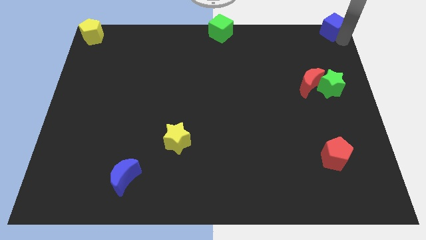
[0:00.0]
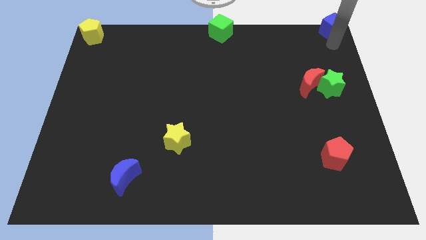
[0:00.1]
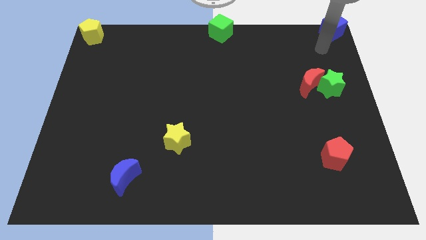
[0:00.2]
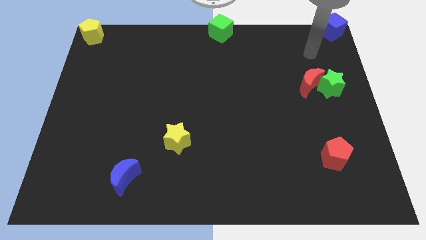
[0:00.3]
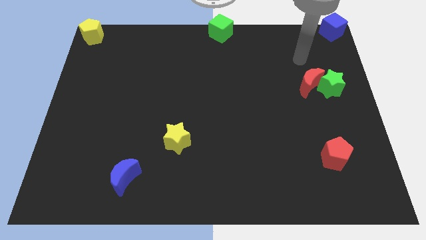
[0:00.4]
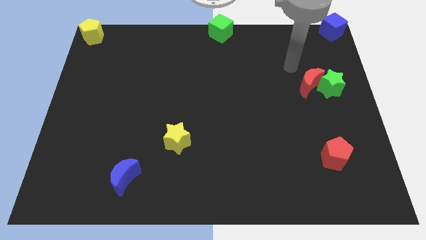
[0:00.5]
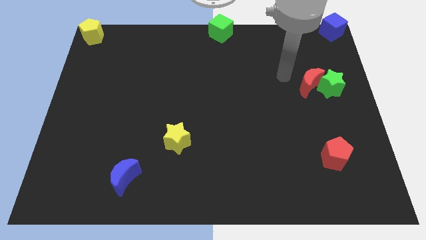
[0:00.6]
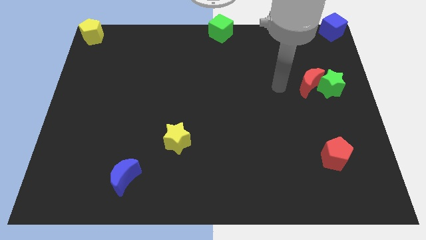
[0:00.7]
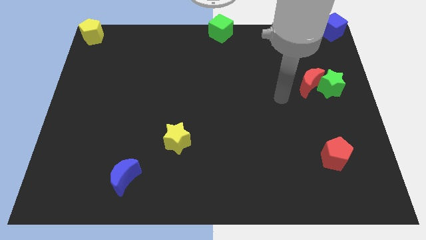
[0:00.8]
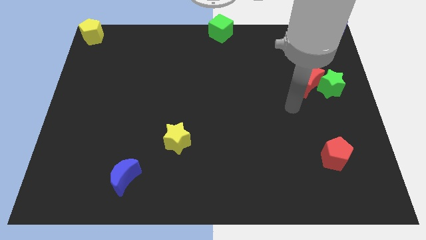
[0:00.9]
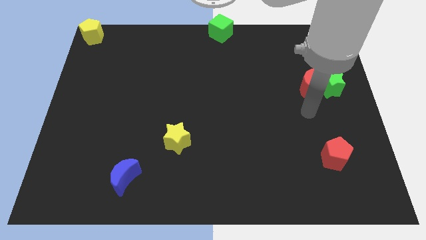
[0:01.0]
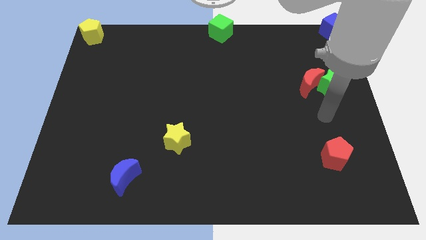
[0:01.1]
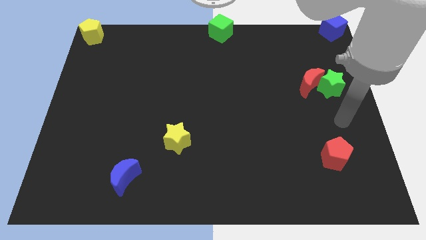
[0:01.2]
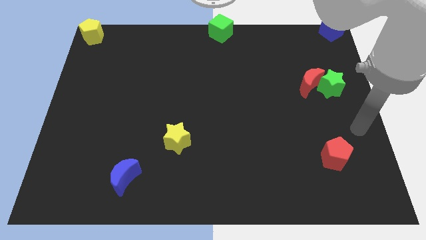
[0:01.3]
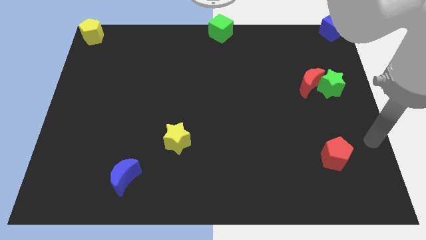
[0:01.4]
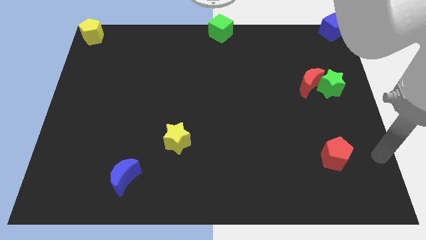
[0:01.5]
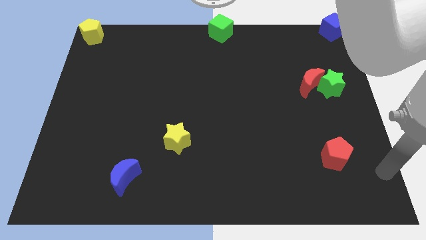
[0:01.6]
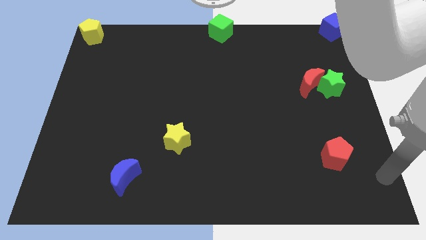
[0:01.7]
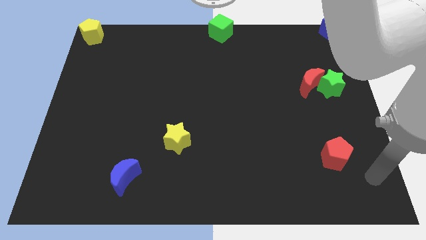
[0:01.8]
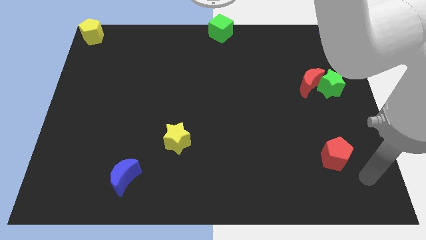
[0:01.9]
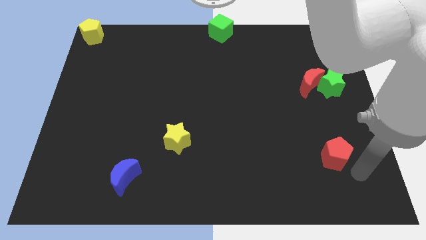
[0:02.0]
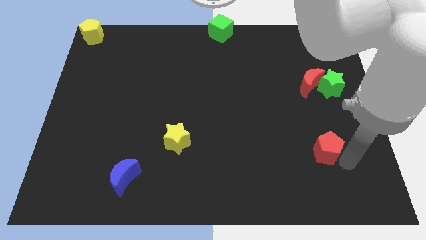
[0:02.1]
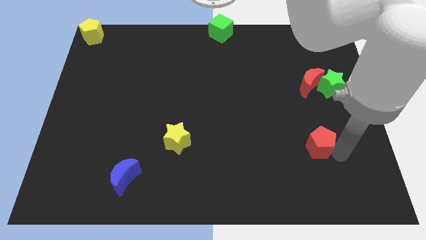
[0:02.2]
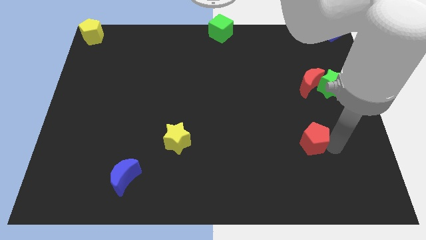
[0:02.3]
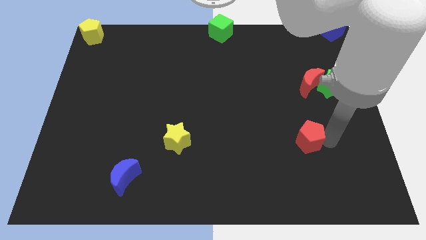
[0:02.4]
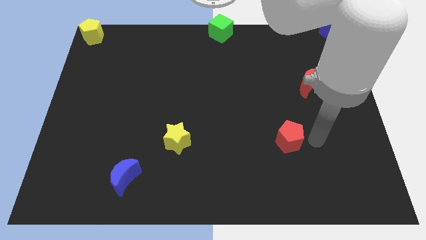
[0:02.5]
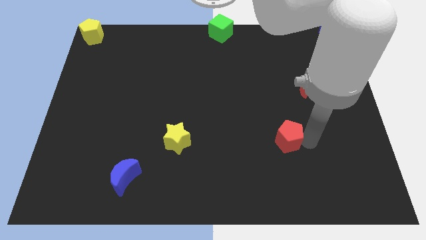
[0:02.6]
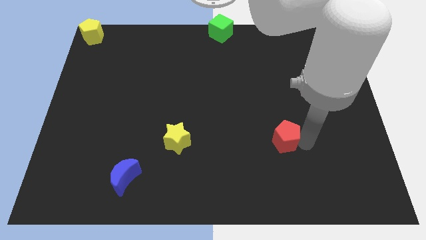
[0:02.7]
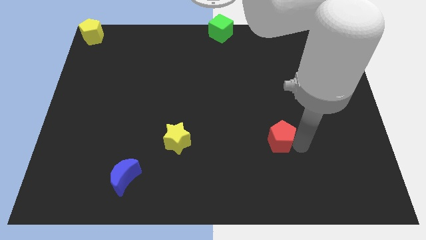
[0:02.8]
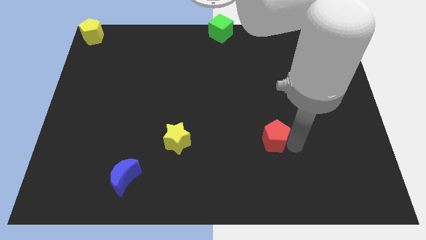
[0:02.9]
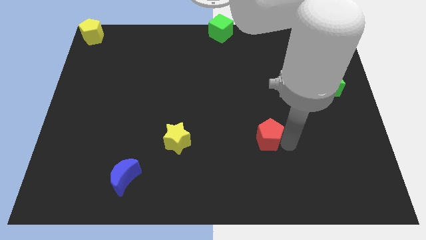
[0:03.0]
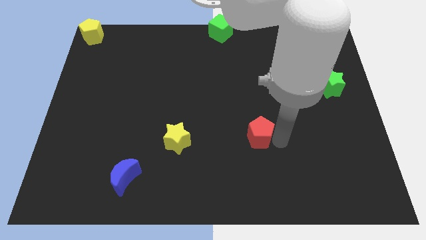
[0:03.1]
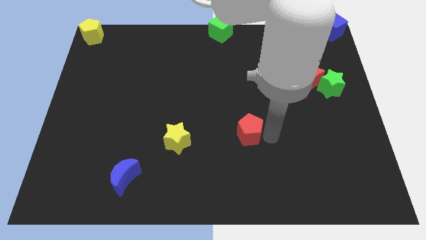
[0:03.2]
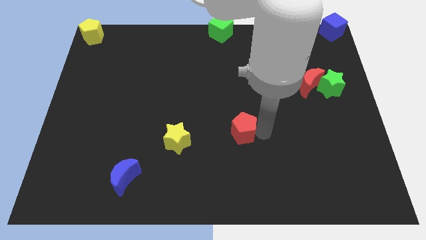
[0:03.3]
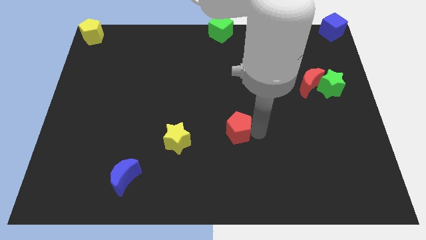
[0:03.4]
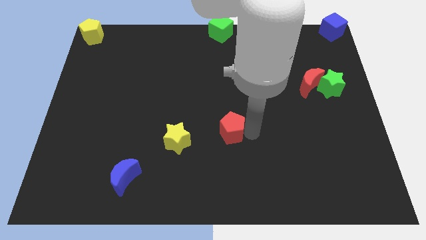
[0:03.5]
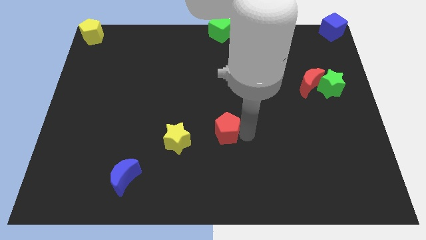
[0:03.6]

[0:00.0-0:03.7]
push the red pentagon towards the right side of the yellow star

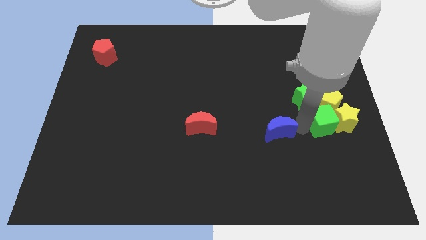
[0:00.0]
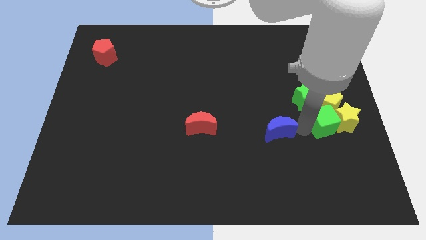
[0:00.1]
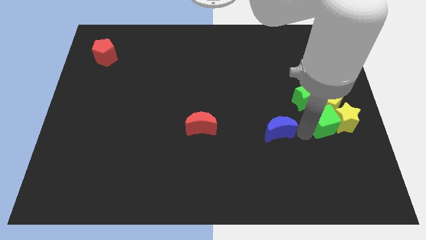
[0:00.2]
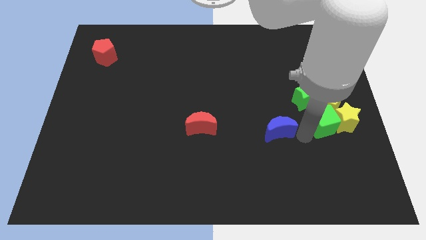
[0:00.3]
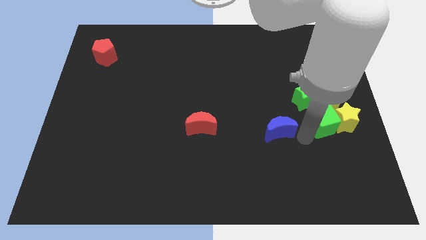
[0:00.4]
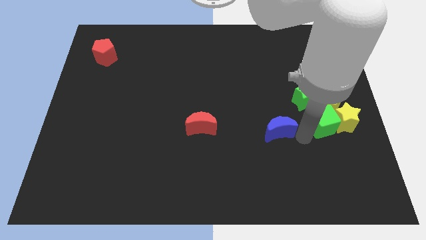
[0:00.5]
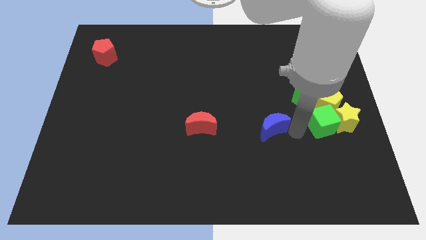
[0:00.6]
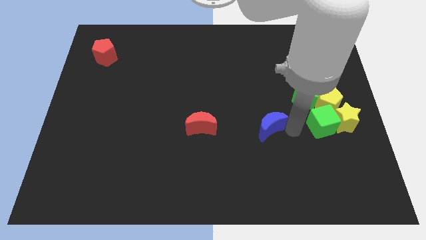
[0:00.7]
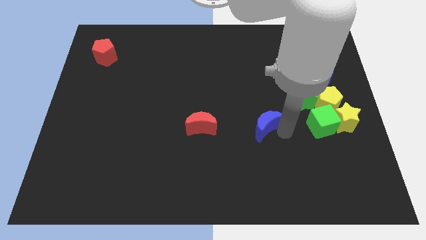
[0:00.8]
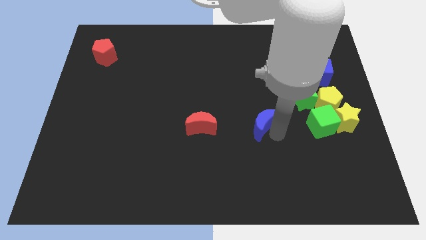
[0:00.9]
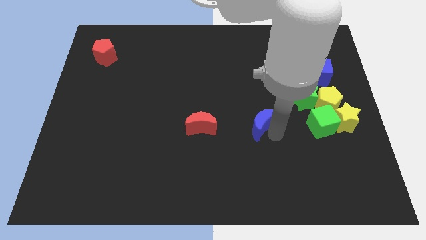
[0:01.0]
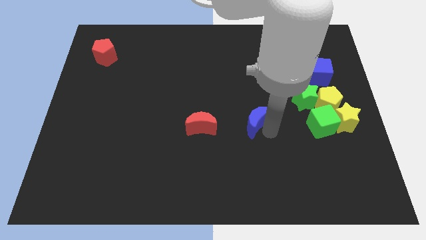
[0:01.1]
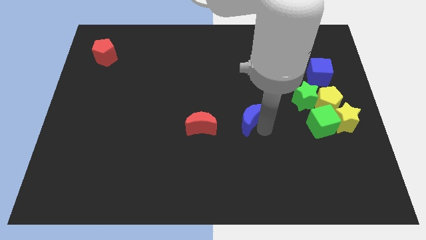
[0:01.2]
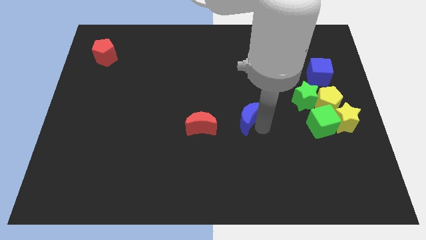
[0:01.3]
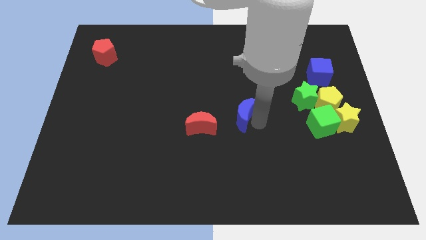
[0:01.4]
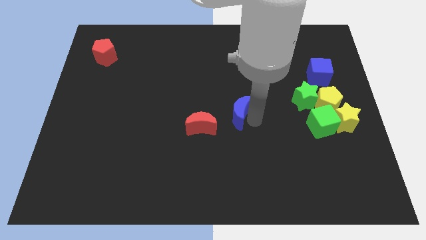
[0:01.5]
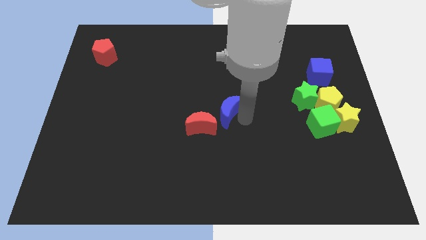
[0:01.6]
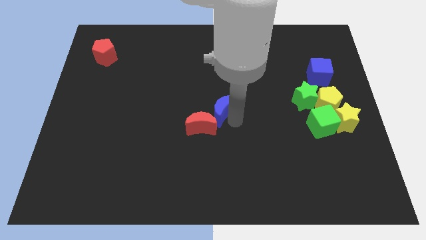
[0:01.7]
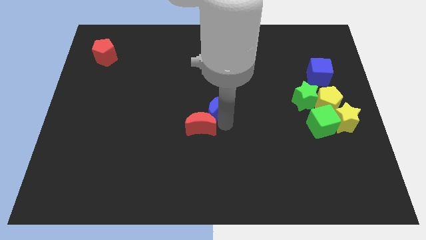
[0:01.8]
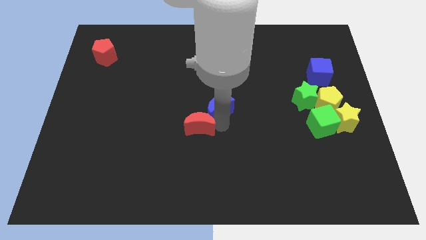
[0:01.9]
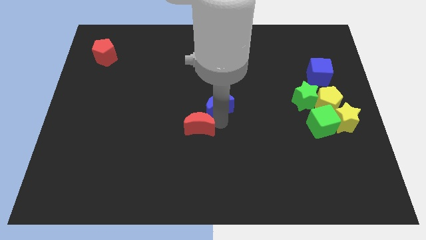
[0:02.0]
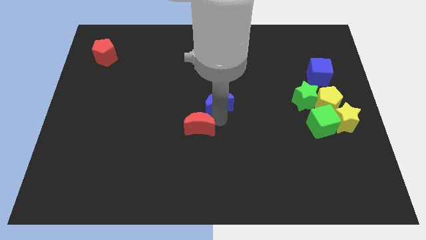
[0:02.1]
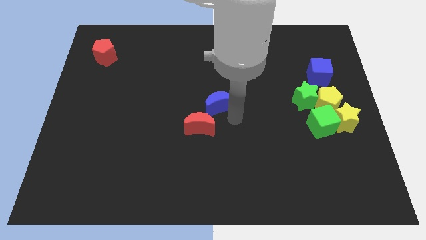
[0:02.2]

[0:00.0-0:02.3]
make the blue crescent to touch the red crescent

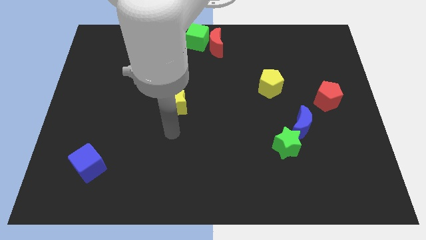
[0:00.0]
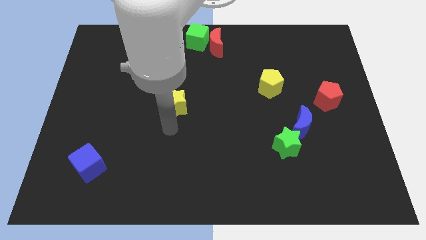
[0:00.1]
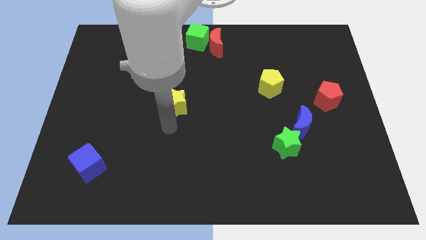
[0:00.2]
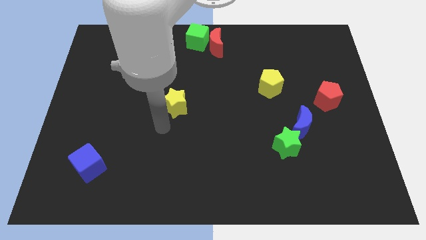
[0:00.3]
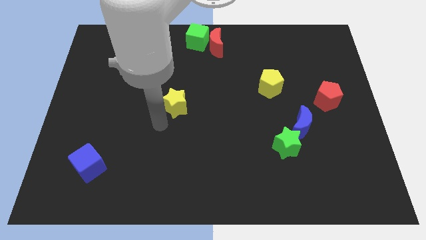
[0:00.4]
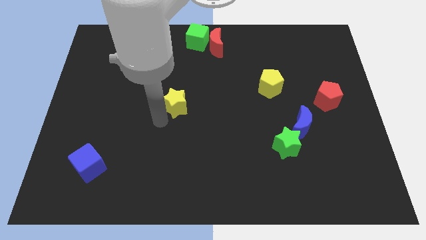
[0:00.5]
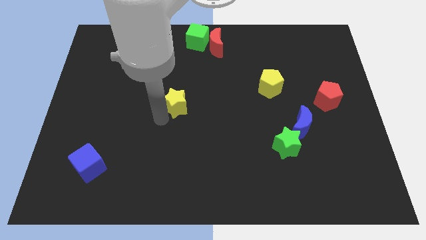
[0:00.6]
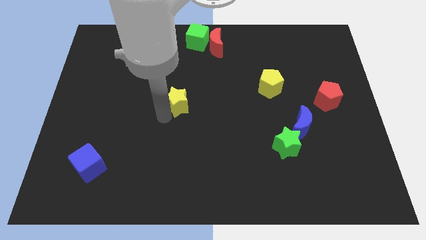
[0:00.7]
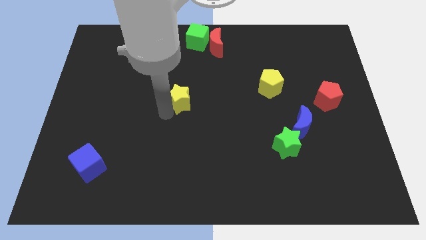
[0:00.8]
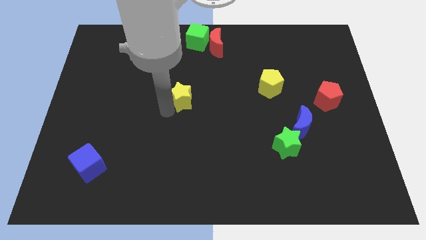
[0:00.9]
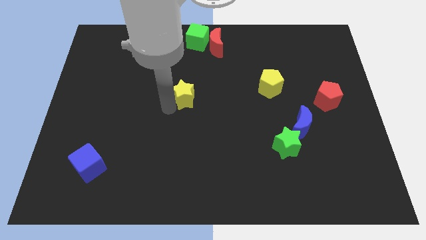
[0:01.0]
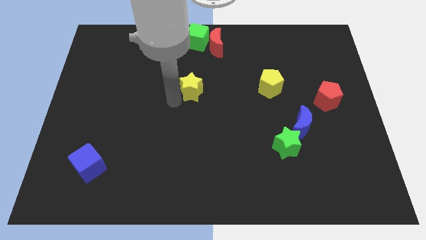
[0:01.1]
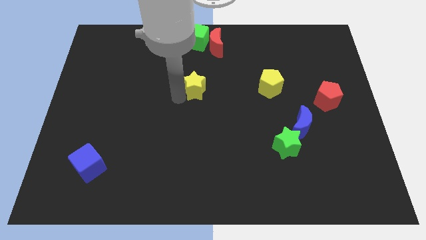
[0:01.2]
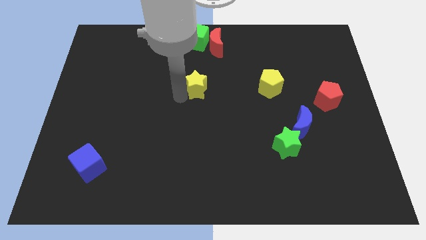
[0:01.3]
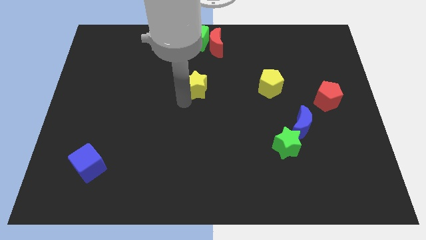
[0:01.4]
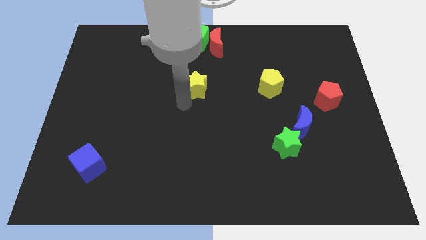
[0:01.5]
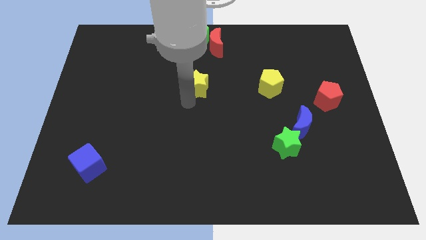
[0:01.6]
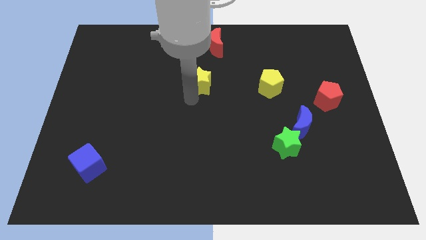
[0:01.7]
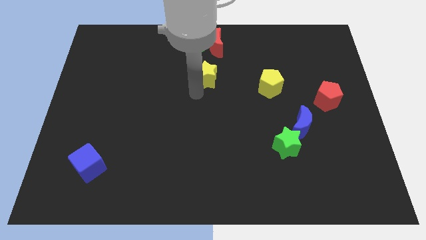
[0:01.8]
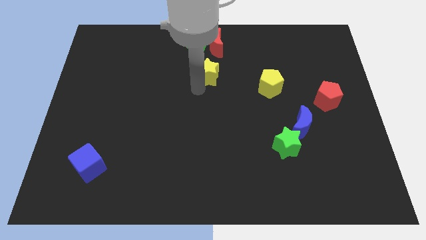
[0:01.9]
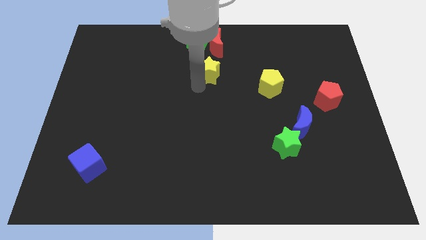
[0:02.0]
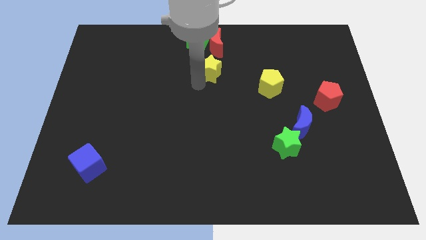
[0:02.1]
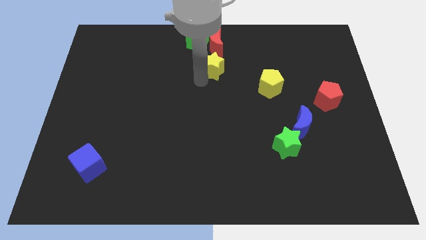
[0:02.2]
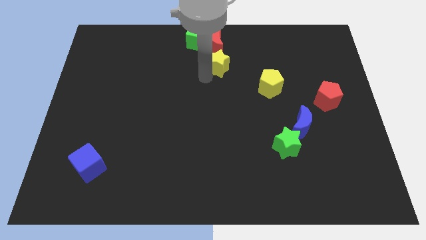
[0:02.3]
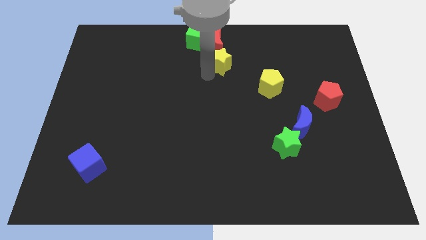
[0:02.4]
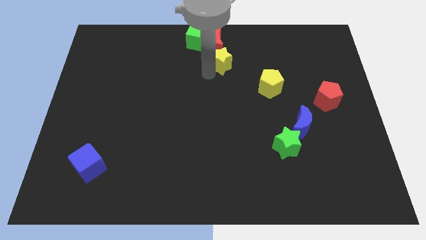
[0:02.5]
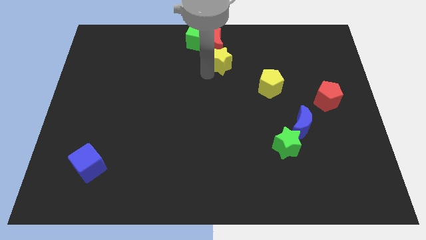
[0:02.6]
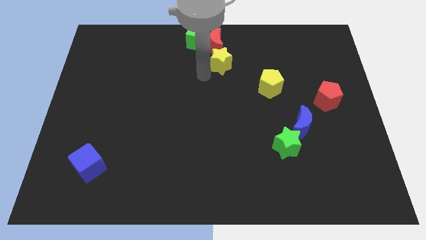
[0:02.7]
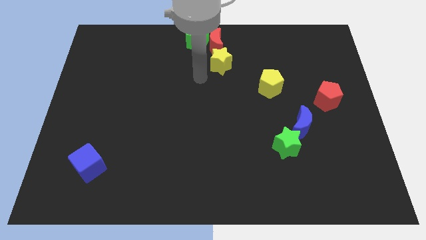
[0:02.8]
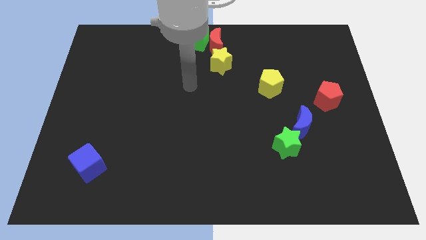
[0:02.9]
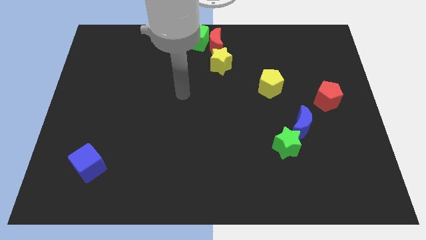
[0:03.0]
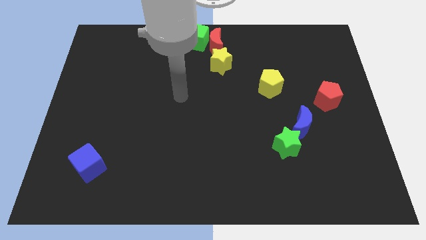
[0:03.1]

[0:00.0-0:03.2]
put the yellow star at the bottom of red moon
